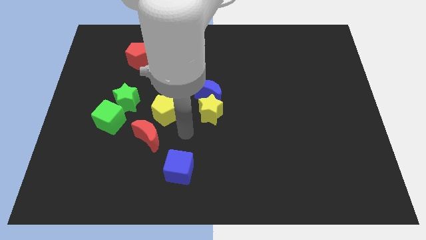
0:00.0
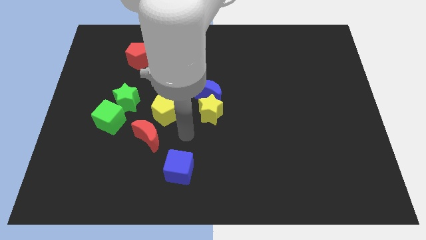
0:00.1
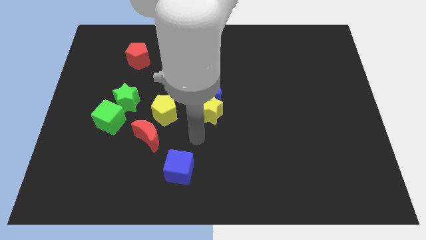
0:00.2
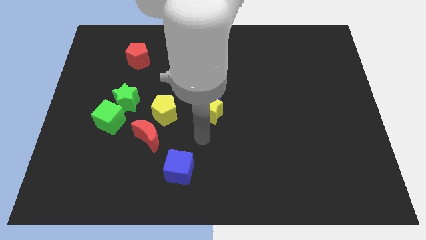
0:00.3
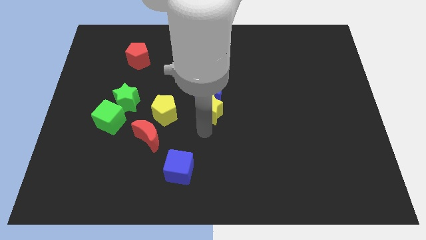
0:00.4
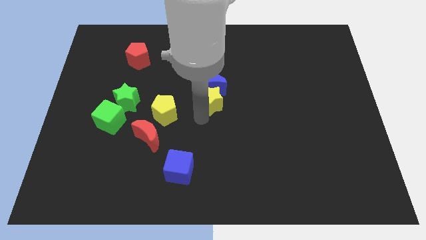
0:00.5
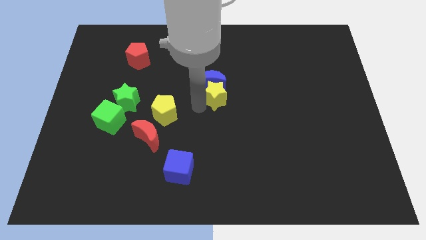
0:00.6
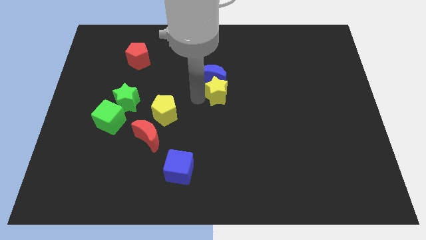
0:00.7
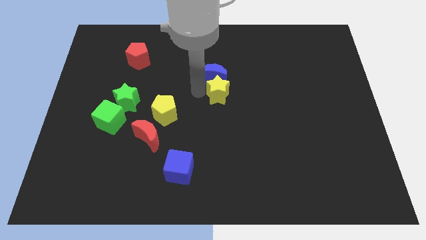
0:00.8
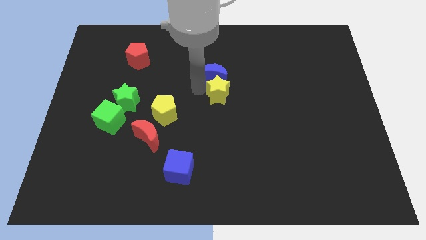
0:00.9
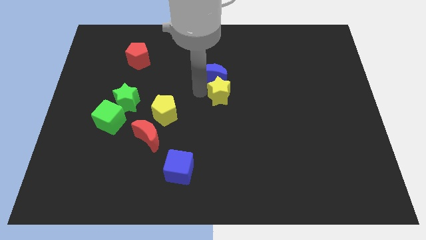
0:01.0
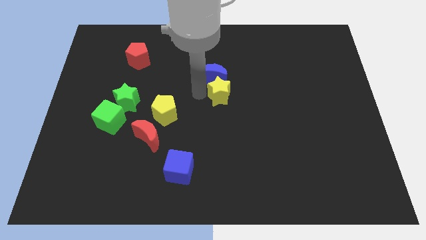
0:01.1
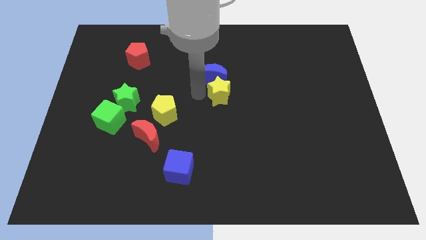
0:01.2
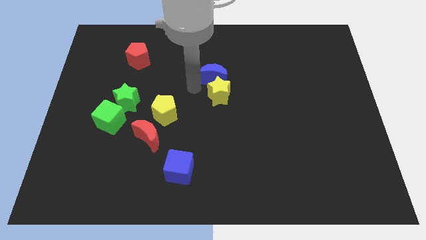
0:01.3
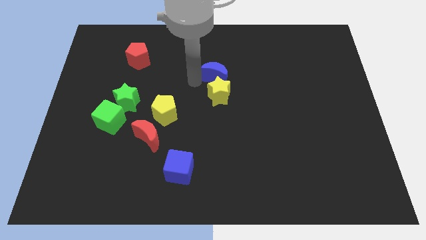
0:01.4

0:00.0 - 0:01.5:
move yellow star along with blue moon to center

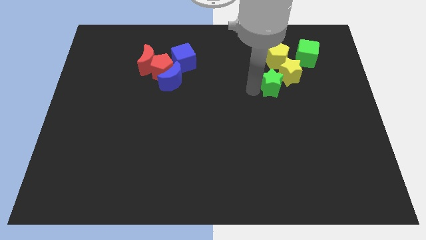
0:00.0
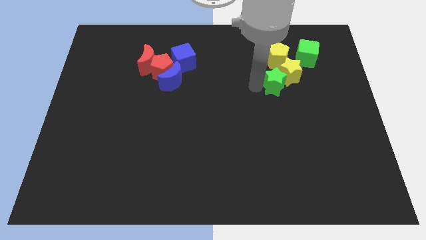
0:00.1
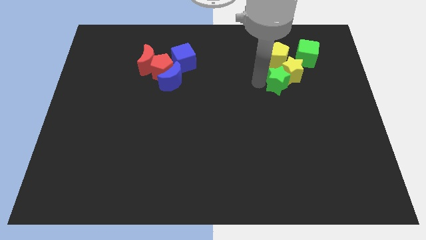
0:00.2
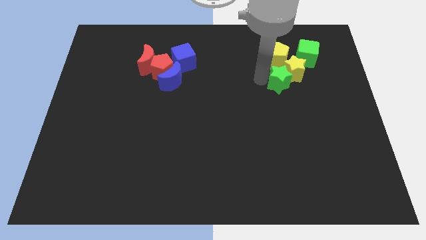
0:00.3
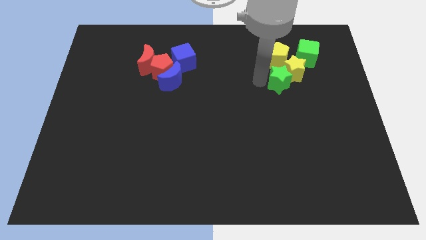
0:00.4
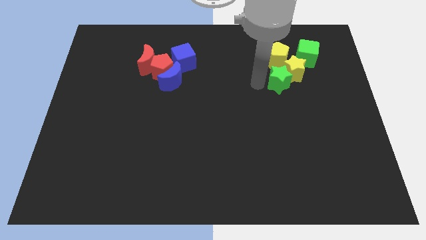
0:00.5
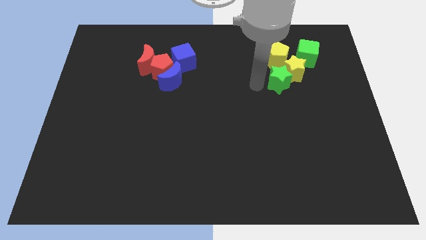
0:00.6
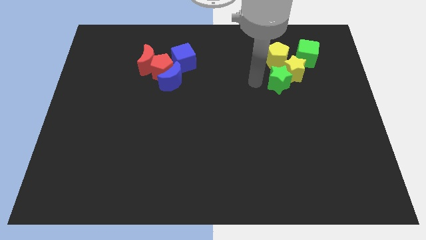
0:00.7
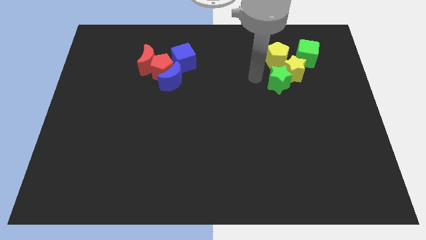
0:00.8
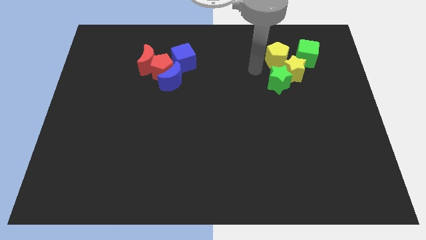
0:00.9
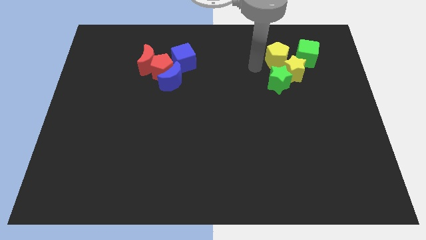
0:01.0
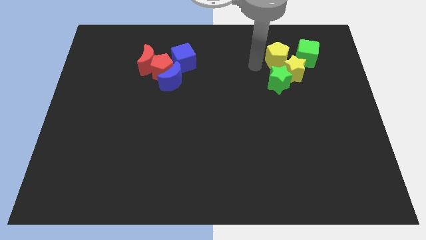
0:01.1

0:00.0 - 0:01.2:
push the green star into the yellow star

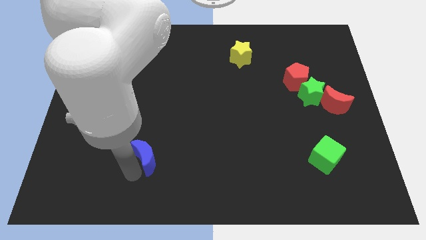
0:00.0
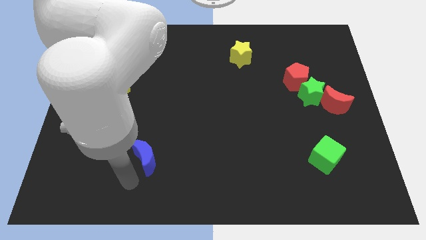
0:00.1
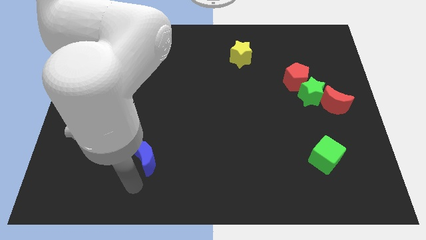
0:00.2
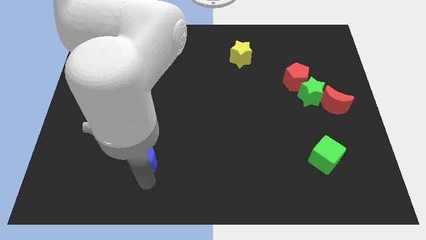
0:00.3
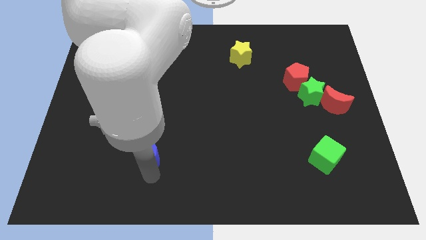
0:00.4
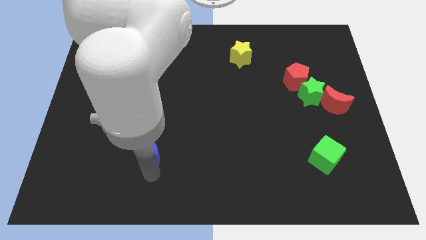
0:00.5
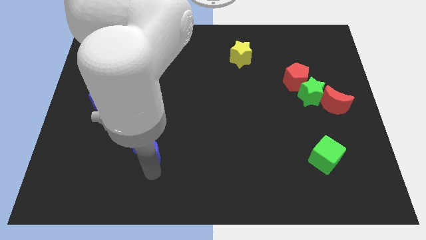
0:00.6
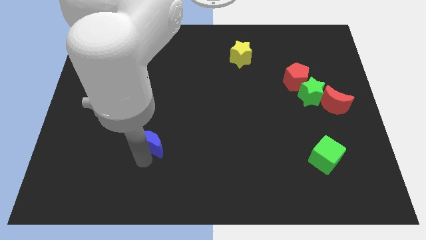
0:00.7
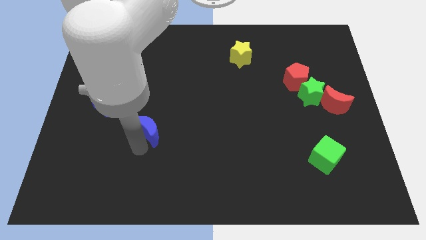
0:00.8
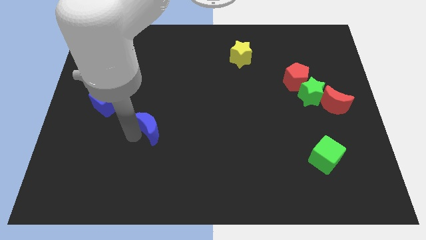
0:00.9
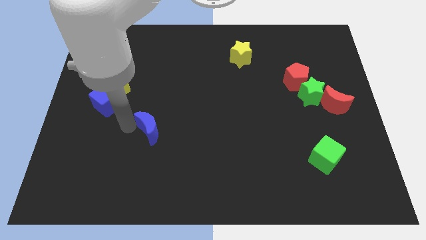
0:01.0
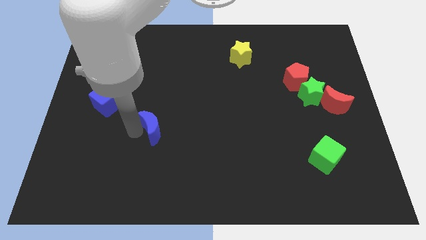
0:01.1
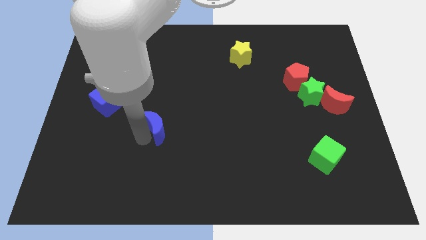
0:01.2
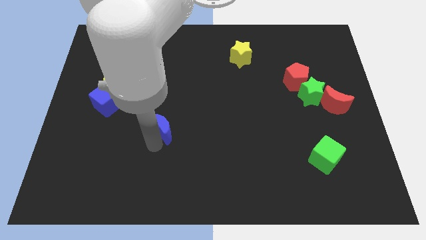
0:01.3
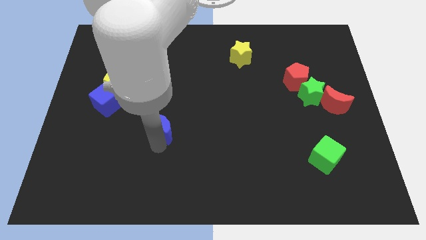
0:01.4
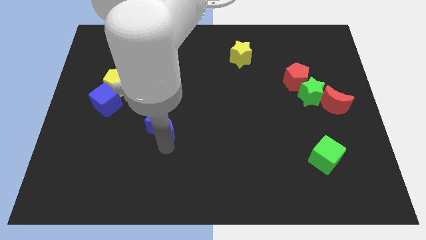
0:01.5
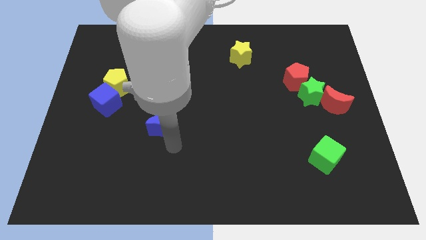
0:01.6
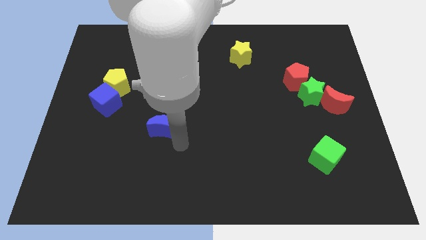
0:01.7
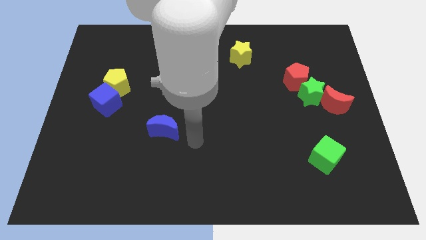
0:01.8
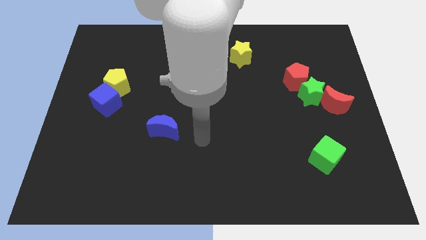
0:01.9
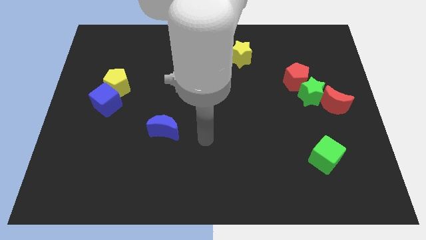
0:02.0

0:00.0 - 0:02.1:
place blue moon to the bottom right of blue cube

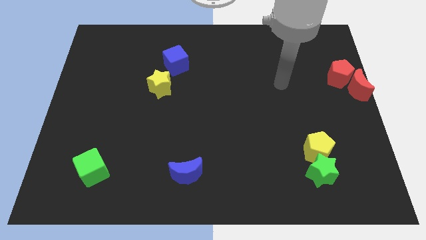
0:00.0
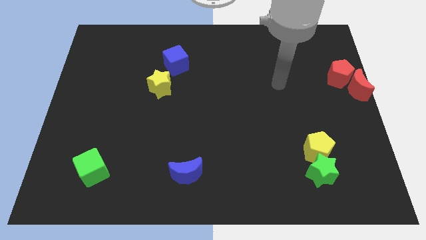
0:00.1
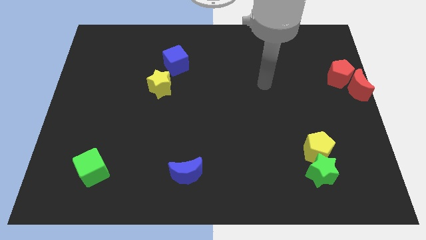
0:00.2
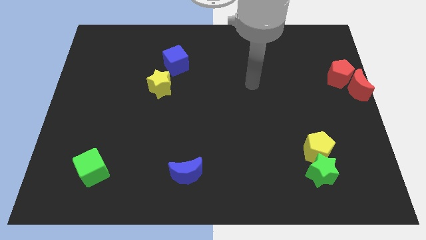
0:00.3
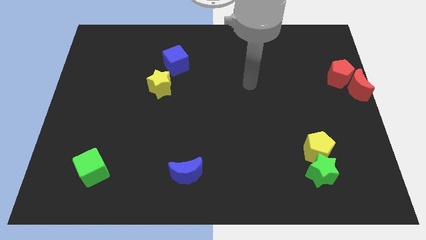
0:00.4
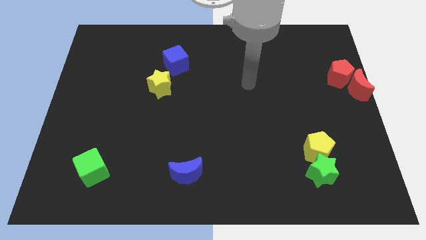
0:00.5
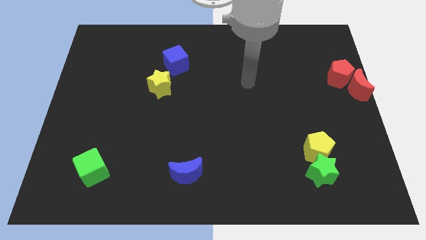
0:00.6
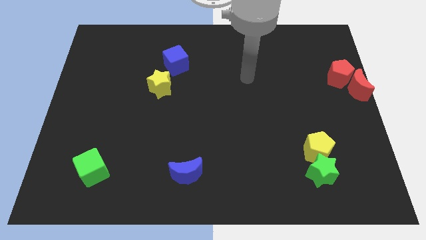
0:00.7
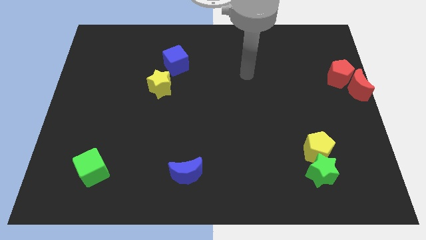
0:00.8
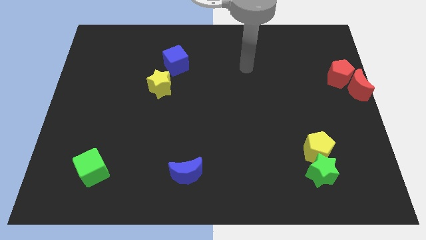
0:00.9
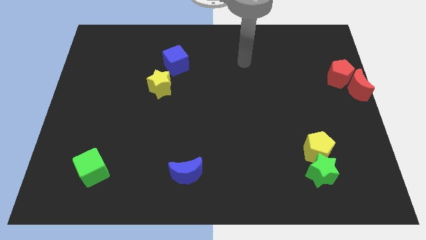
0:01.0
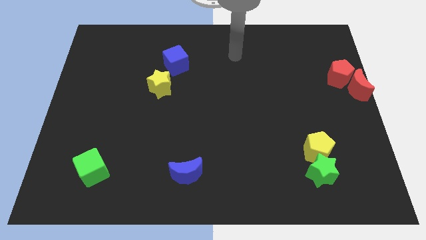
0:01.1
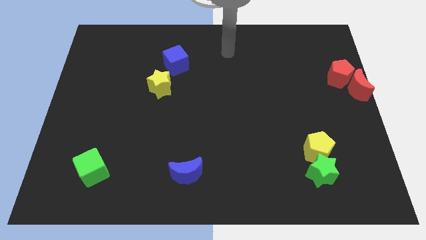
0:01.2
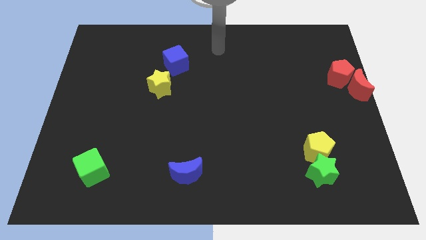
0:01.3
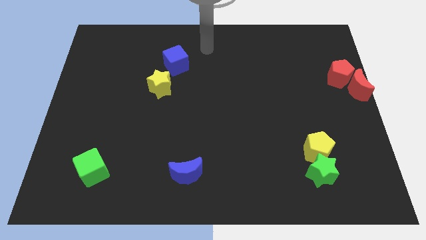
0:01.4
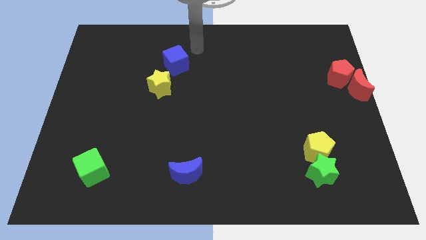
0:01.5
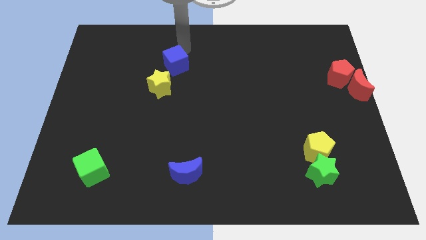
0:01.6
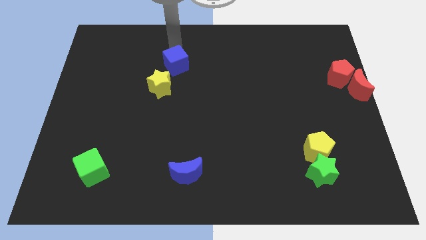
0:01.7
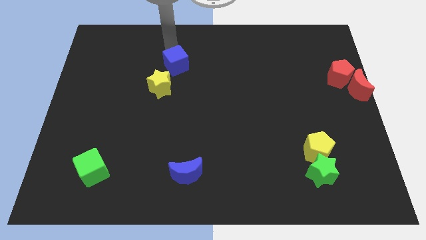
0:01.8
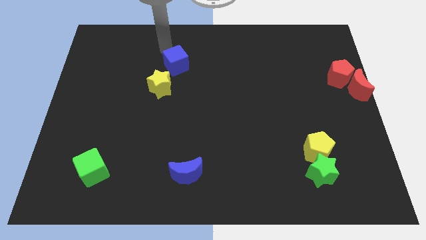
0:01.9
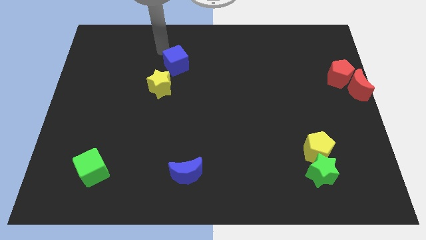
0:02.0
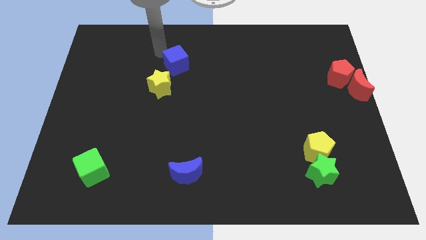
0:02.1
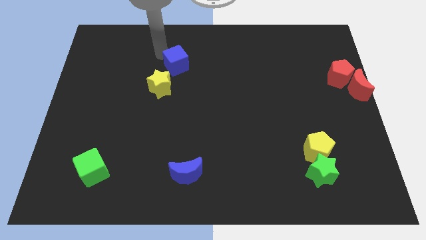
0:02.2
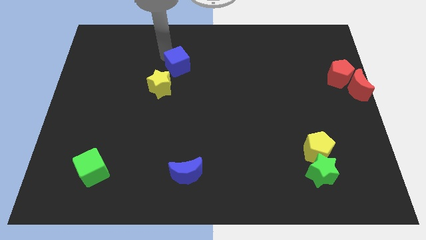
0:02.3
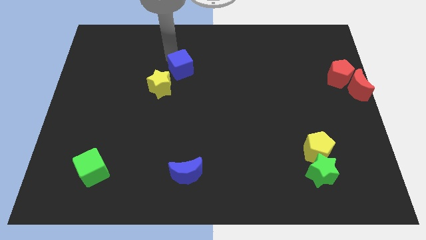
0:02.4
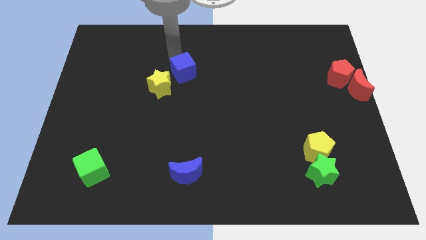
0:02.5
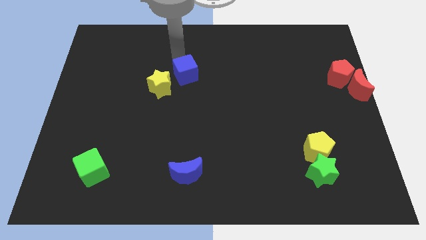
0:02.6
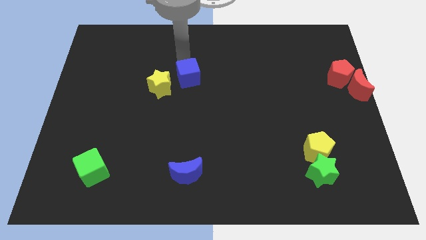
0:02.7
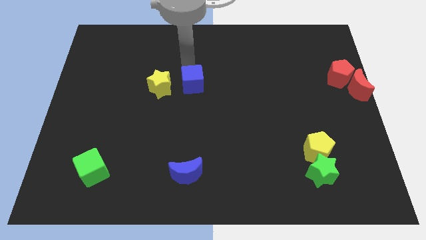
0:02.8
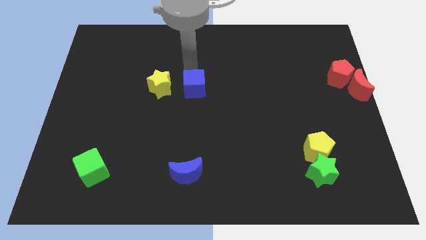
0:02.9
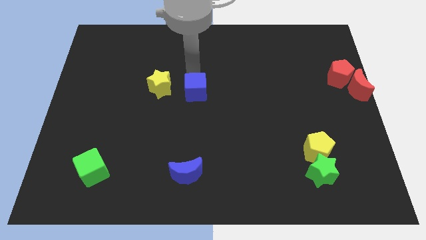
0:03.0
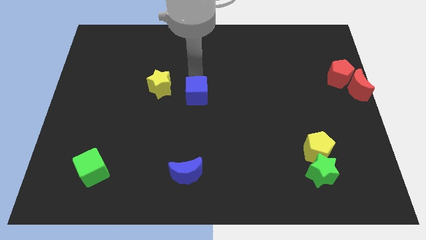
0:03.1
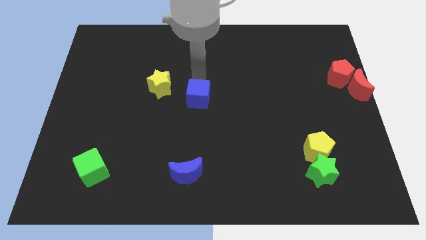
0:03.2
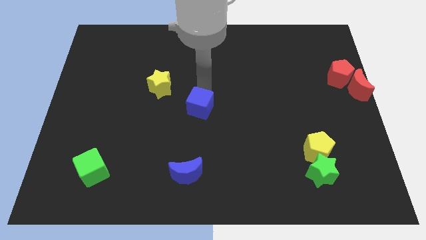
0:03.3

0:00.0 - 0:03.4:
move blue cube slightly down

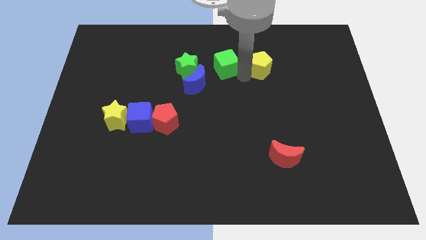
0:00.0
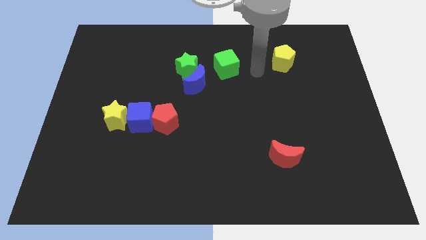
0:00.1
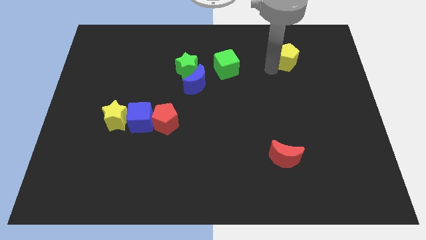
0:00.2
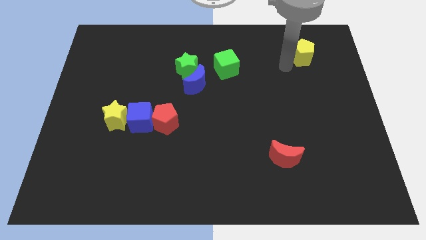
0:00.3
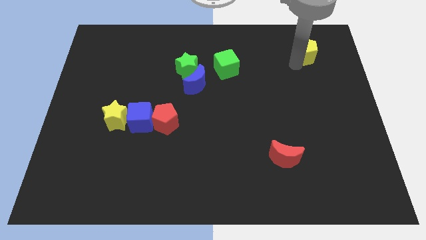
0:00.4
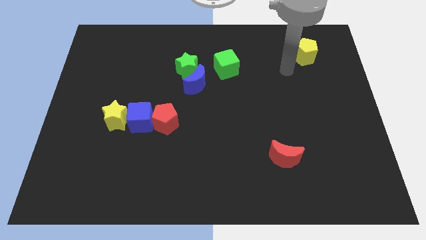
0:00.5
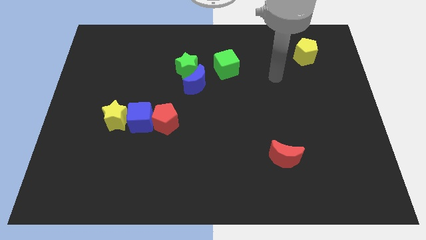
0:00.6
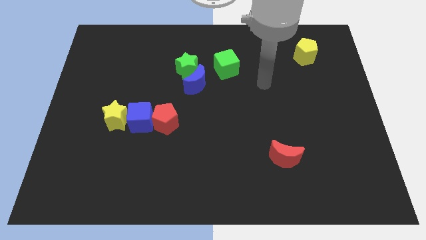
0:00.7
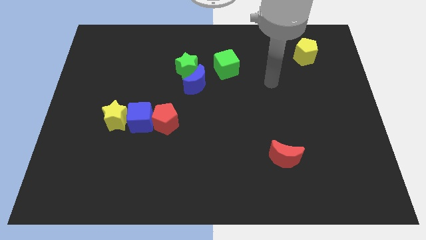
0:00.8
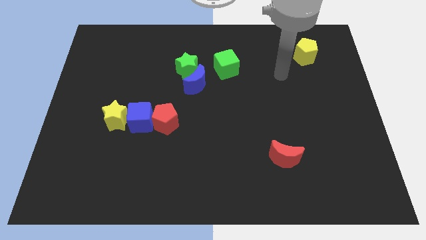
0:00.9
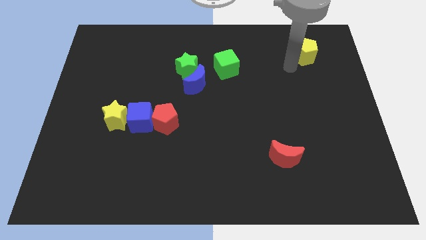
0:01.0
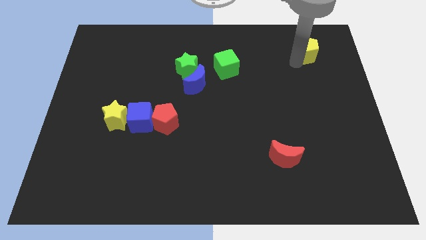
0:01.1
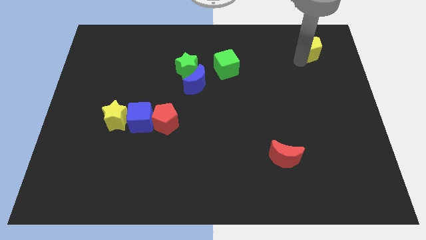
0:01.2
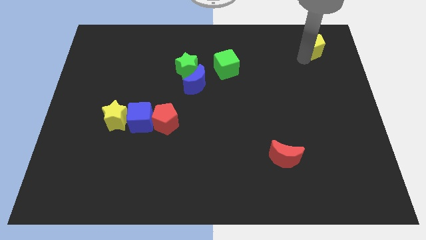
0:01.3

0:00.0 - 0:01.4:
slide the yellow pentagon to the top right of the table
